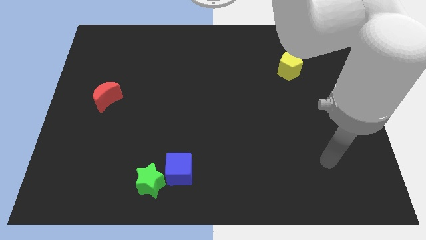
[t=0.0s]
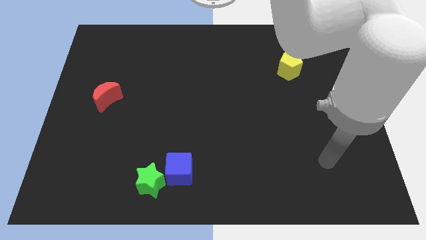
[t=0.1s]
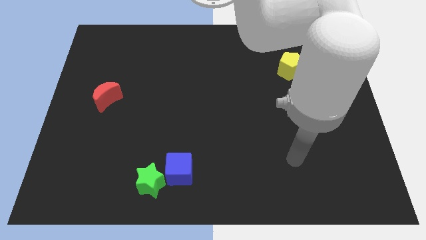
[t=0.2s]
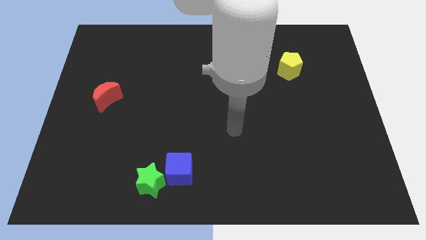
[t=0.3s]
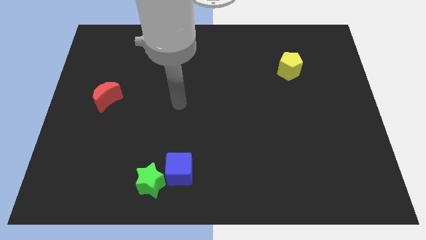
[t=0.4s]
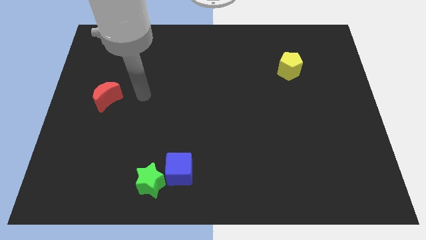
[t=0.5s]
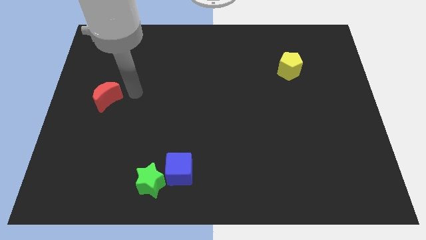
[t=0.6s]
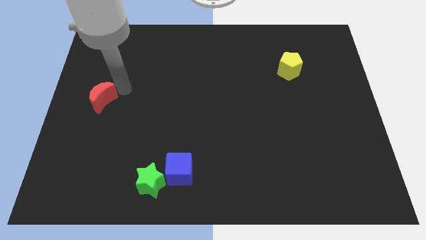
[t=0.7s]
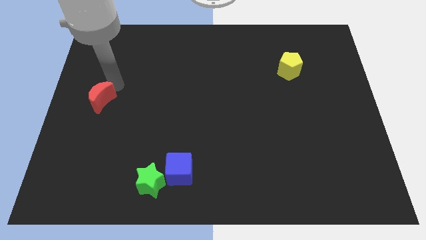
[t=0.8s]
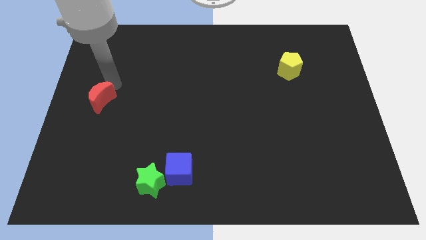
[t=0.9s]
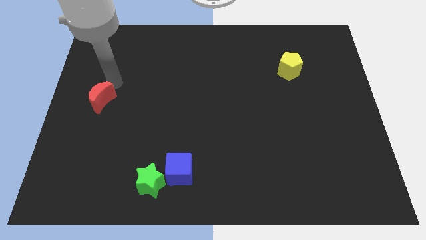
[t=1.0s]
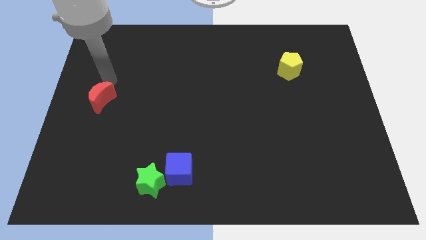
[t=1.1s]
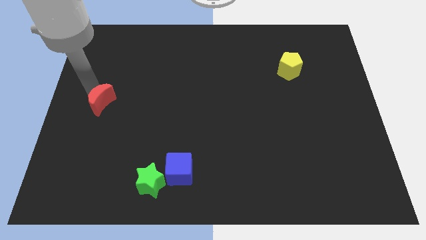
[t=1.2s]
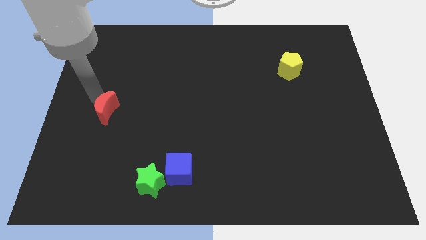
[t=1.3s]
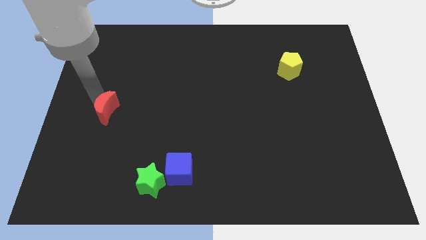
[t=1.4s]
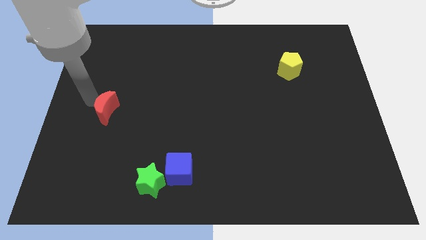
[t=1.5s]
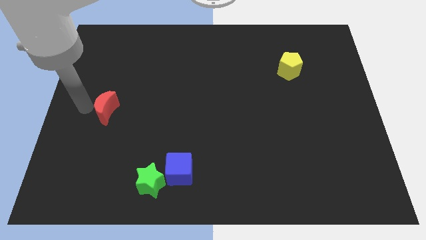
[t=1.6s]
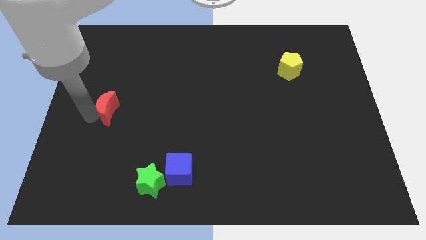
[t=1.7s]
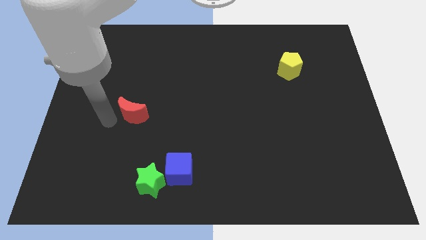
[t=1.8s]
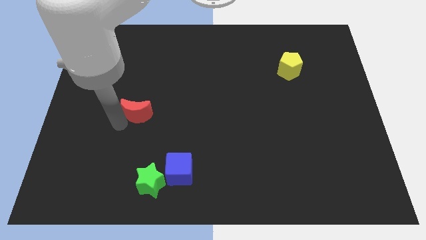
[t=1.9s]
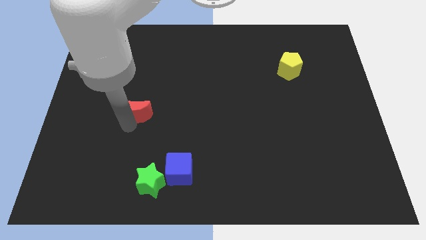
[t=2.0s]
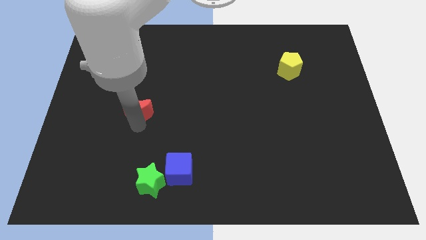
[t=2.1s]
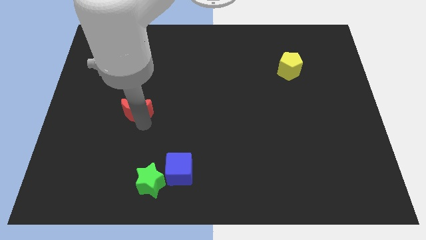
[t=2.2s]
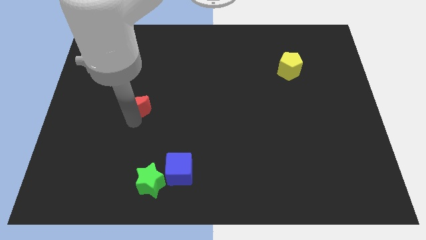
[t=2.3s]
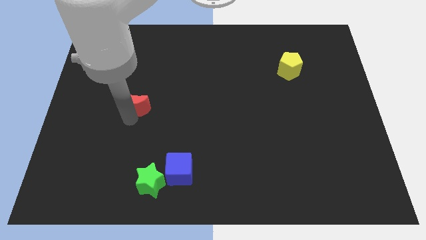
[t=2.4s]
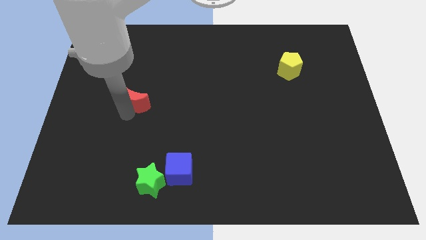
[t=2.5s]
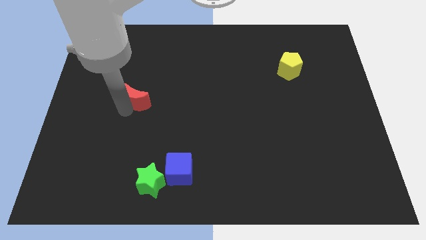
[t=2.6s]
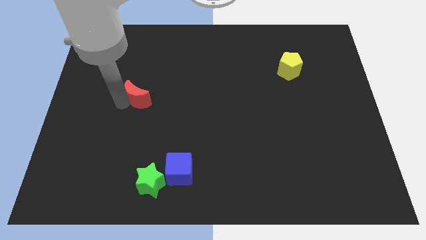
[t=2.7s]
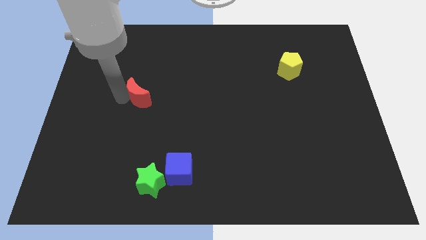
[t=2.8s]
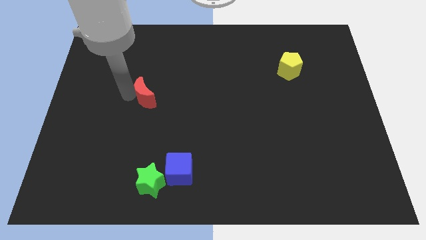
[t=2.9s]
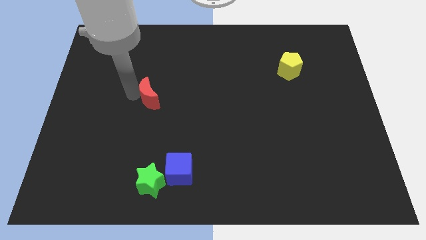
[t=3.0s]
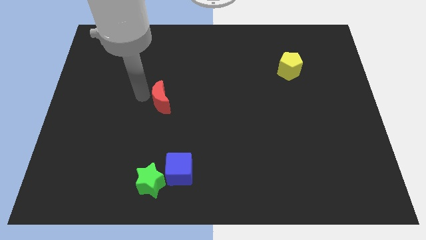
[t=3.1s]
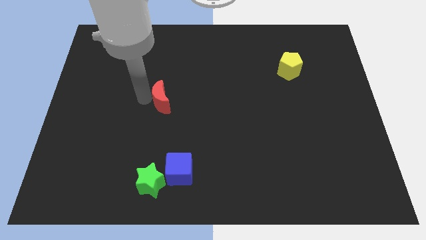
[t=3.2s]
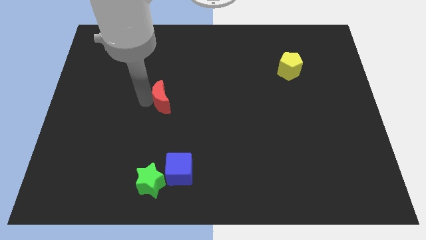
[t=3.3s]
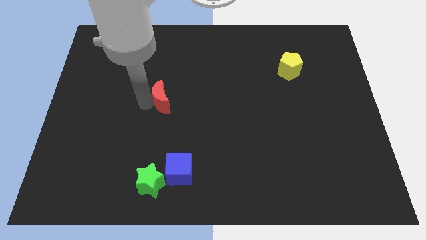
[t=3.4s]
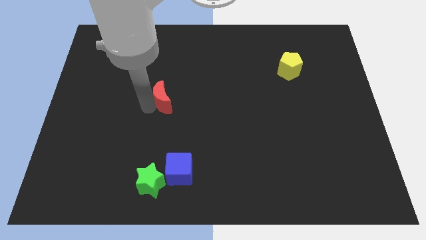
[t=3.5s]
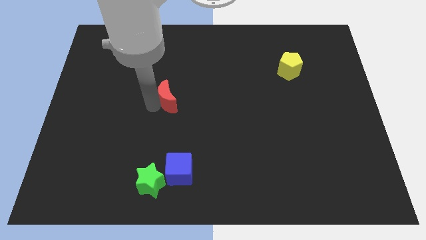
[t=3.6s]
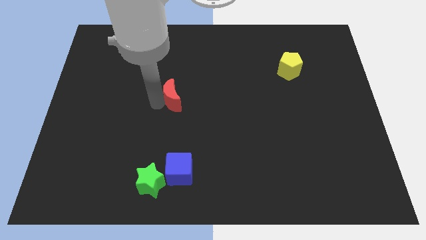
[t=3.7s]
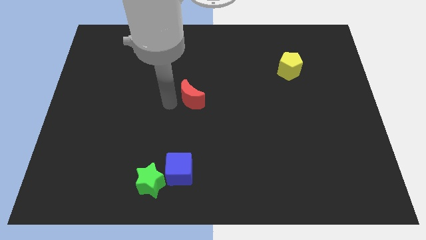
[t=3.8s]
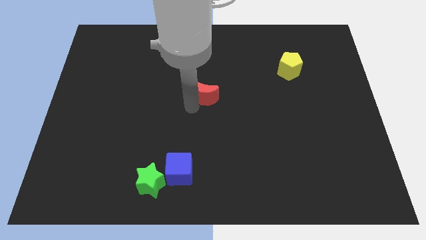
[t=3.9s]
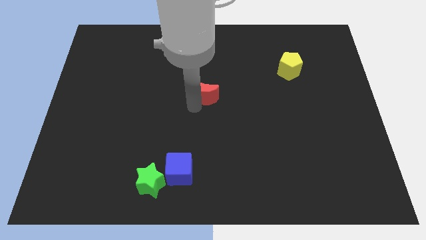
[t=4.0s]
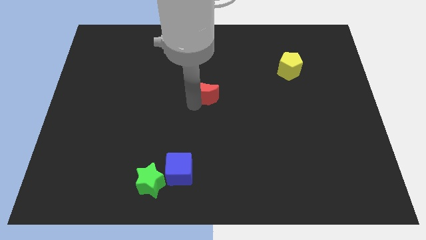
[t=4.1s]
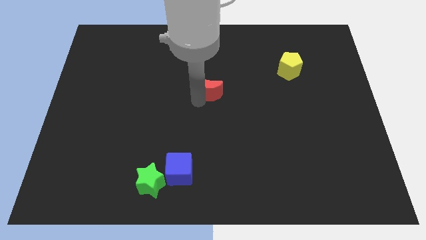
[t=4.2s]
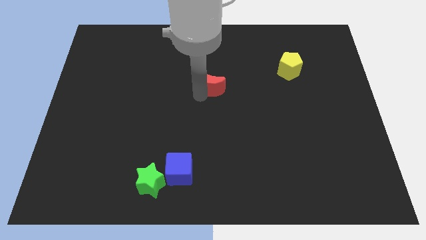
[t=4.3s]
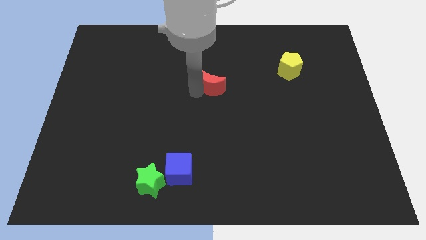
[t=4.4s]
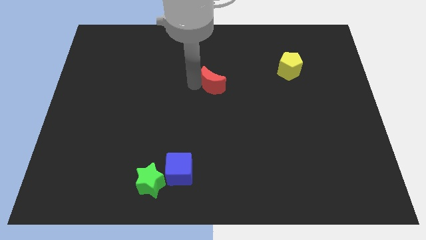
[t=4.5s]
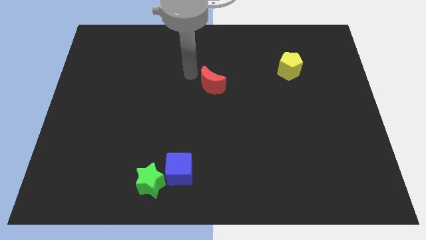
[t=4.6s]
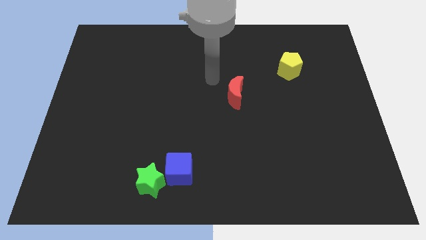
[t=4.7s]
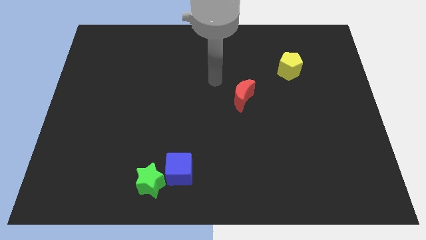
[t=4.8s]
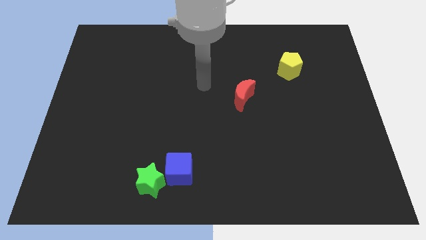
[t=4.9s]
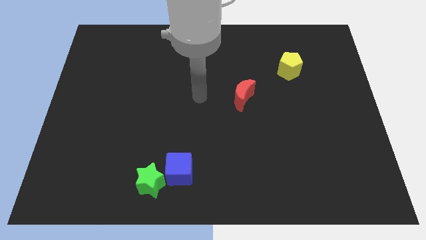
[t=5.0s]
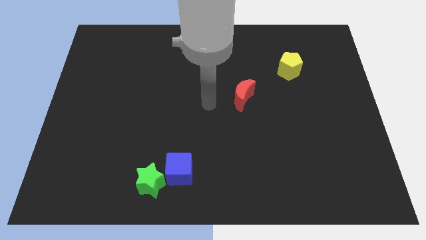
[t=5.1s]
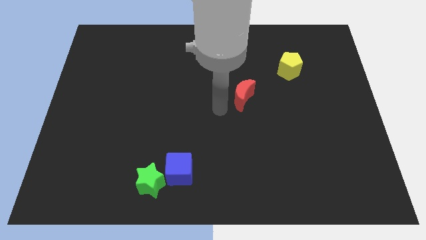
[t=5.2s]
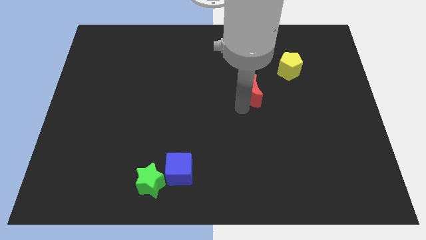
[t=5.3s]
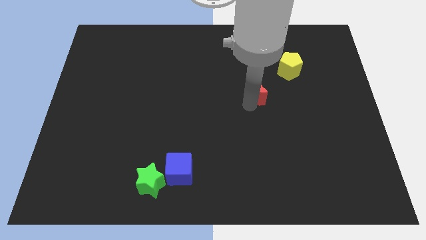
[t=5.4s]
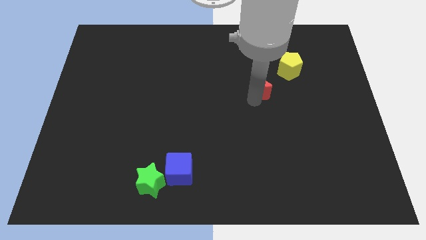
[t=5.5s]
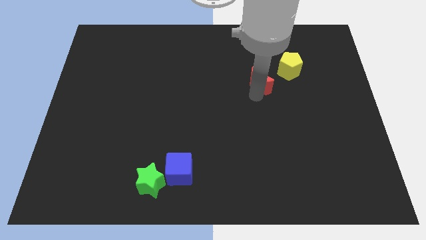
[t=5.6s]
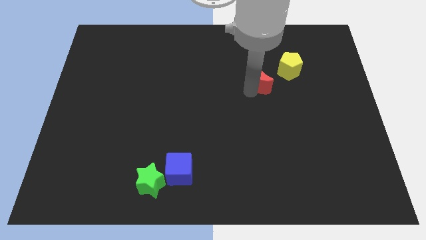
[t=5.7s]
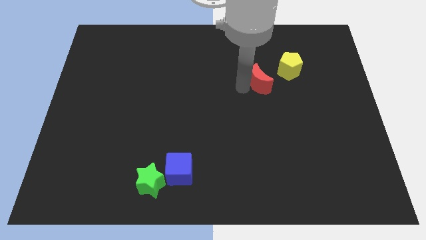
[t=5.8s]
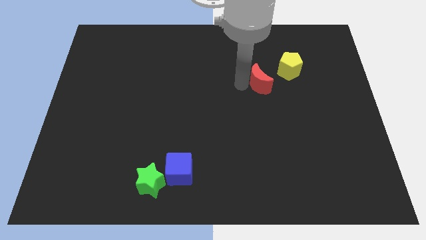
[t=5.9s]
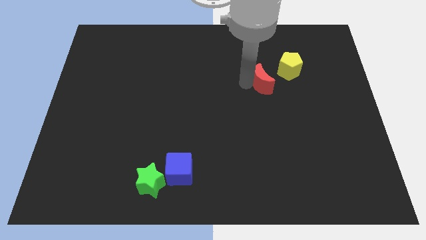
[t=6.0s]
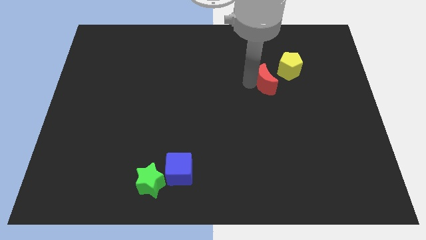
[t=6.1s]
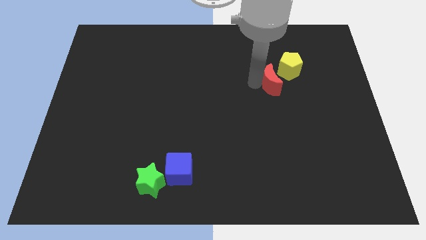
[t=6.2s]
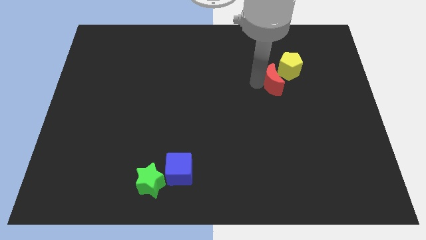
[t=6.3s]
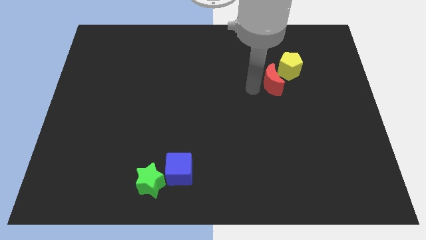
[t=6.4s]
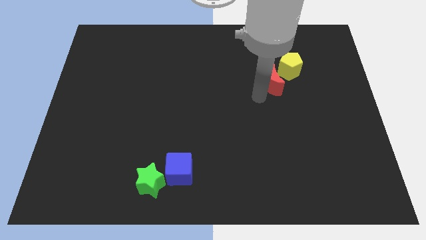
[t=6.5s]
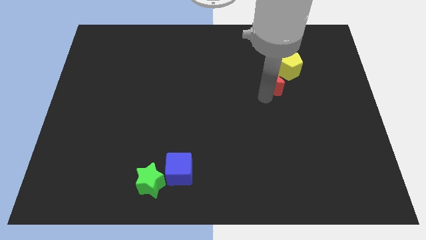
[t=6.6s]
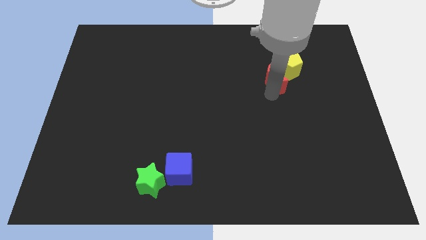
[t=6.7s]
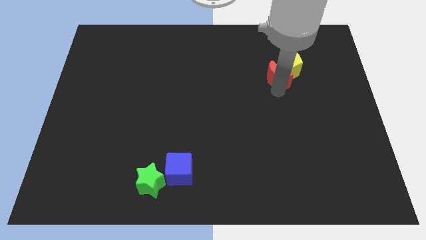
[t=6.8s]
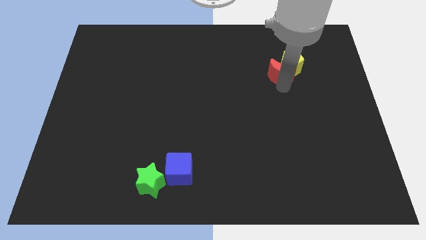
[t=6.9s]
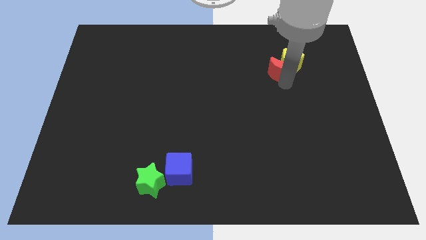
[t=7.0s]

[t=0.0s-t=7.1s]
slide the red block close to the pentagon

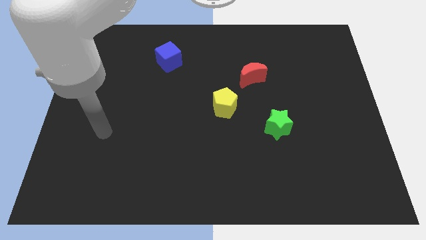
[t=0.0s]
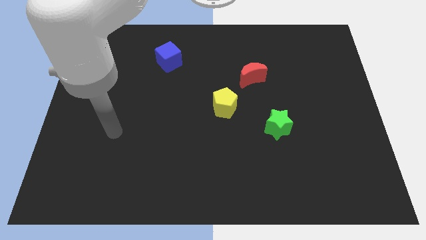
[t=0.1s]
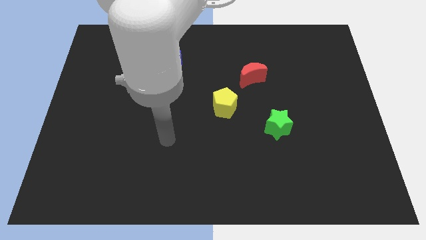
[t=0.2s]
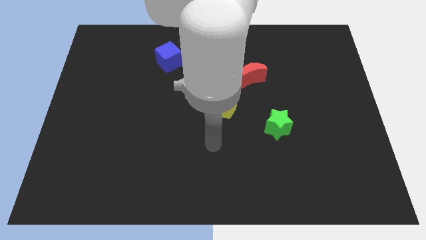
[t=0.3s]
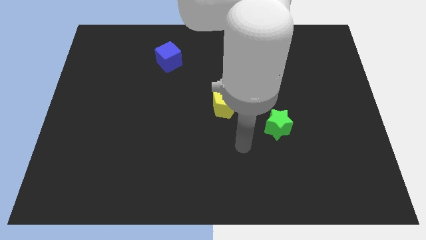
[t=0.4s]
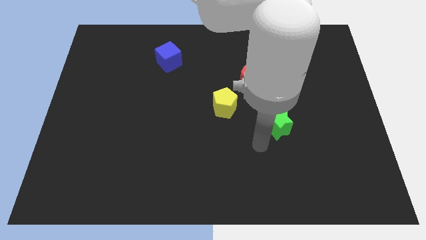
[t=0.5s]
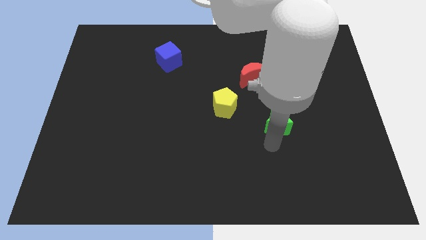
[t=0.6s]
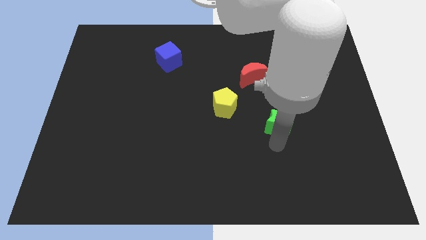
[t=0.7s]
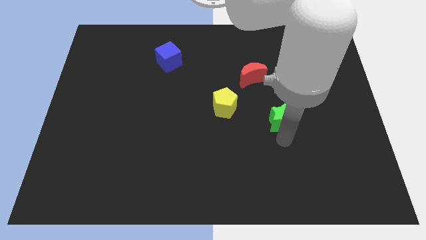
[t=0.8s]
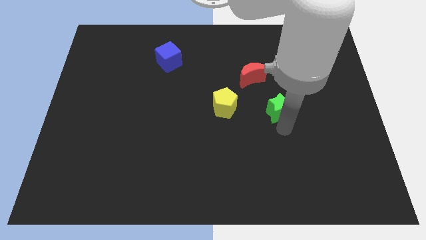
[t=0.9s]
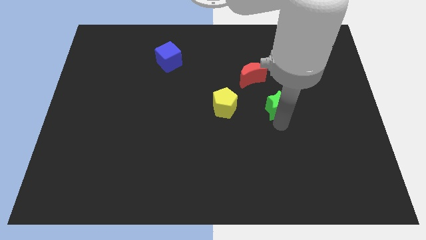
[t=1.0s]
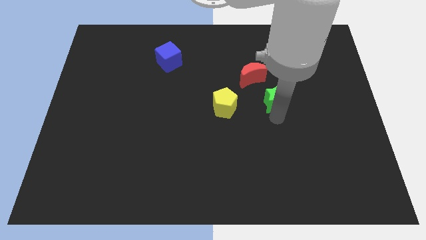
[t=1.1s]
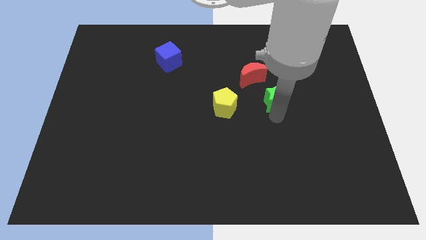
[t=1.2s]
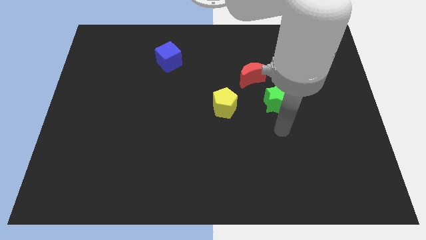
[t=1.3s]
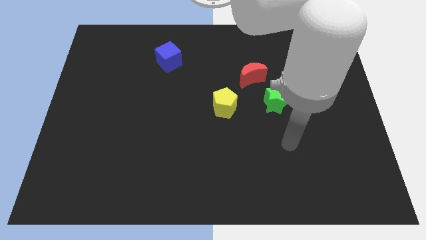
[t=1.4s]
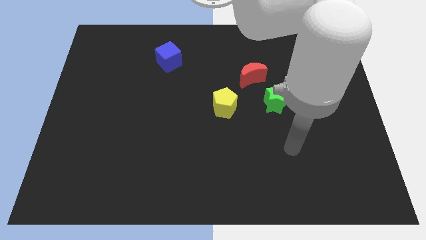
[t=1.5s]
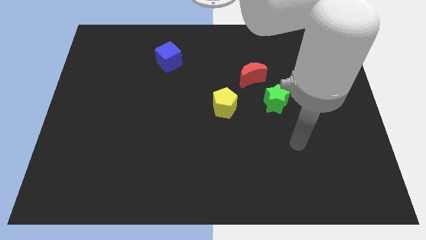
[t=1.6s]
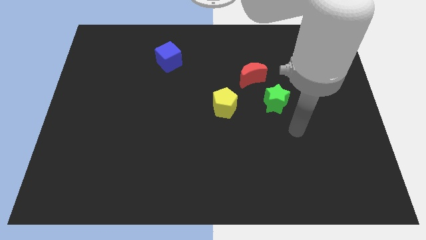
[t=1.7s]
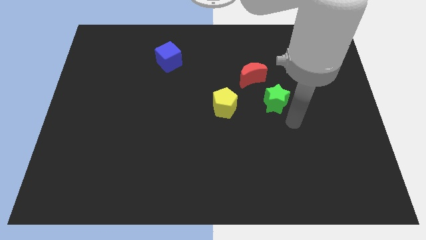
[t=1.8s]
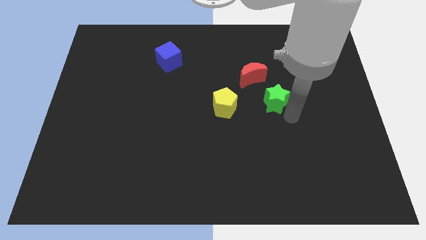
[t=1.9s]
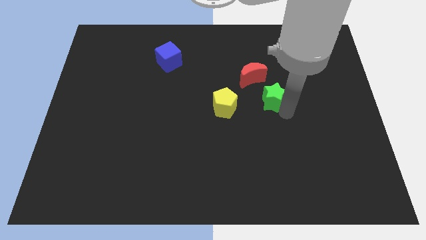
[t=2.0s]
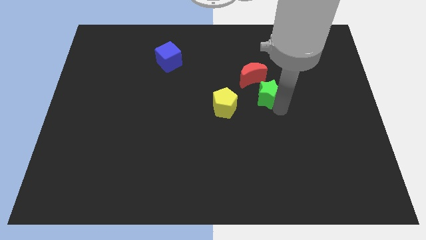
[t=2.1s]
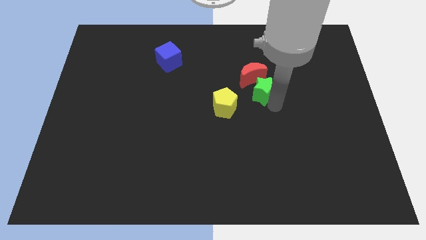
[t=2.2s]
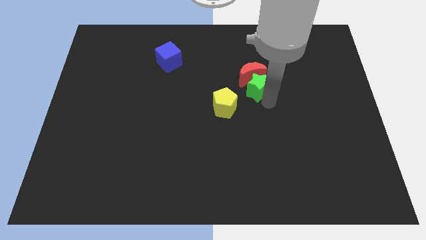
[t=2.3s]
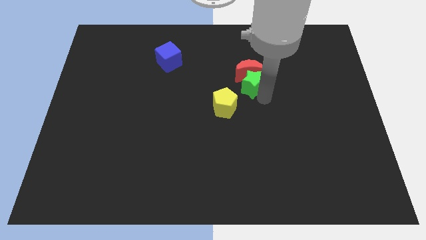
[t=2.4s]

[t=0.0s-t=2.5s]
move the star towards the red block
